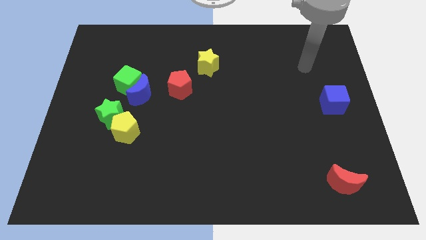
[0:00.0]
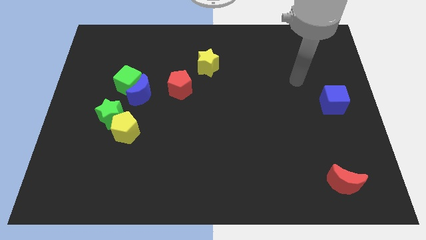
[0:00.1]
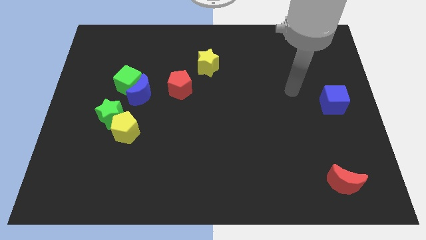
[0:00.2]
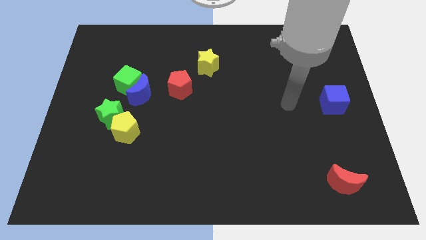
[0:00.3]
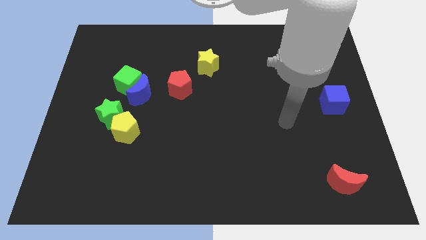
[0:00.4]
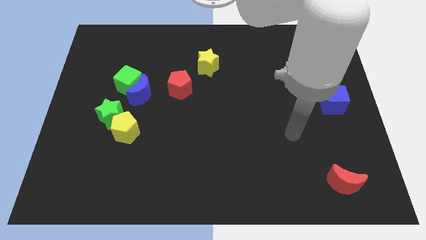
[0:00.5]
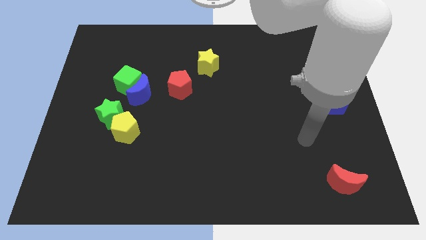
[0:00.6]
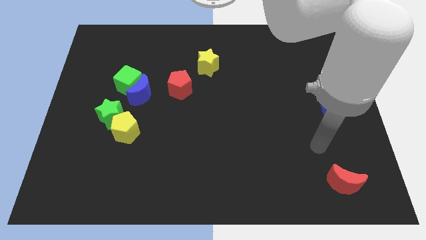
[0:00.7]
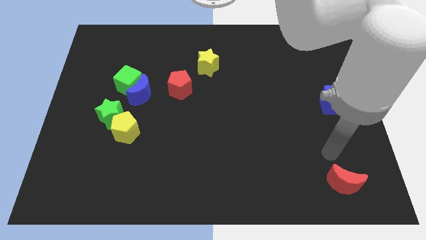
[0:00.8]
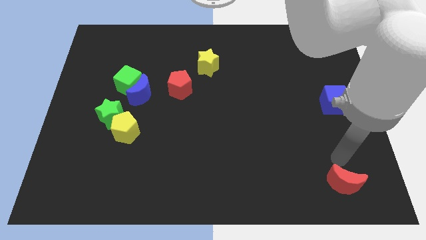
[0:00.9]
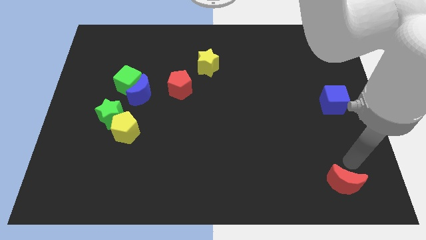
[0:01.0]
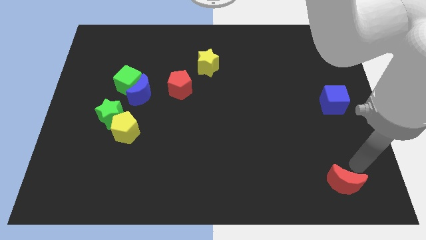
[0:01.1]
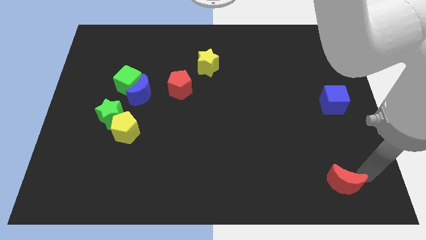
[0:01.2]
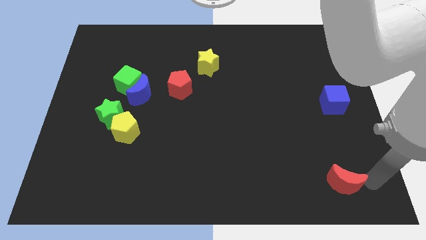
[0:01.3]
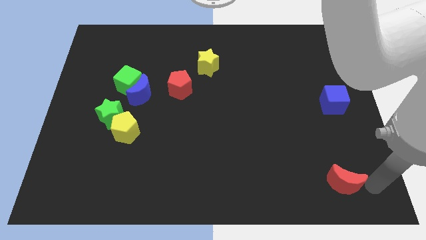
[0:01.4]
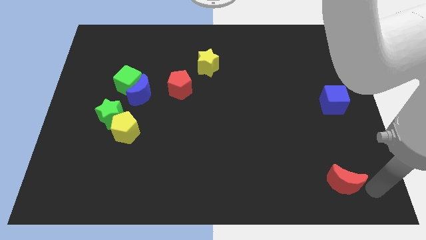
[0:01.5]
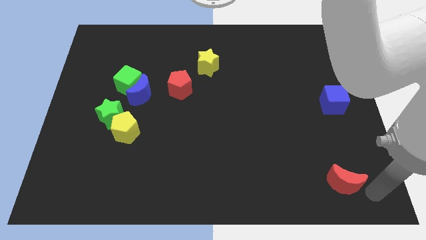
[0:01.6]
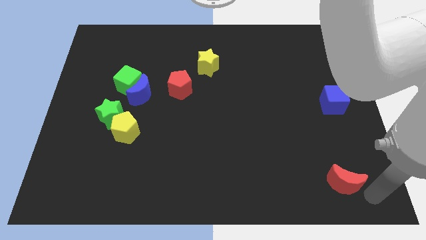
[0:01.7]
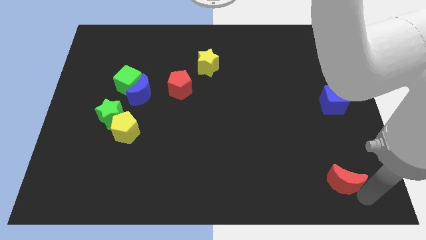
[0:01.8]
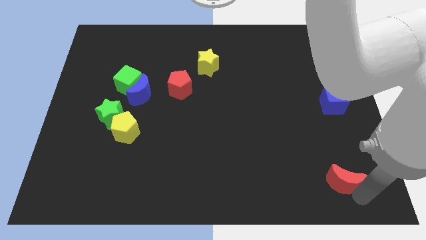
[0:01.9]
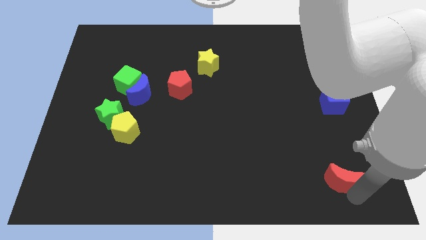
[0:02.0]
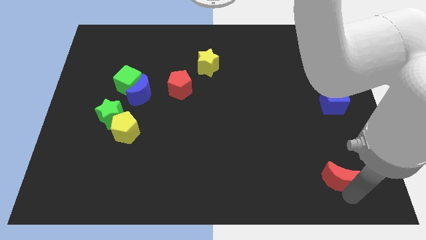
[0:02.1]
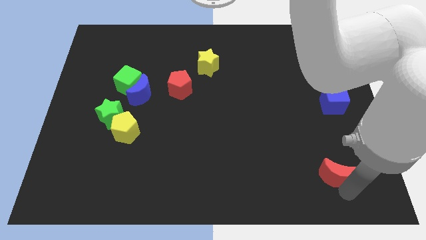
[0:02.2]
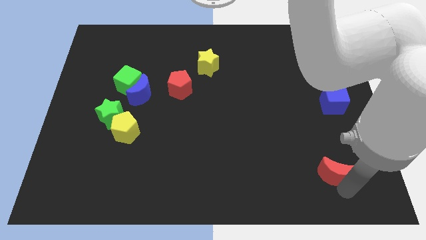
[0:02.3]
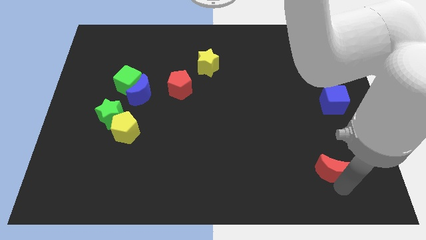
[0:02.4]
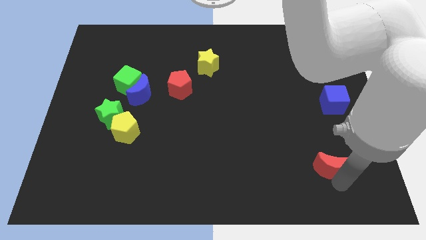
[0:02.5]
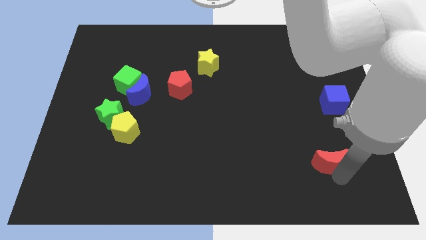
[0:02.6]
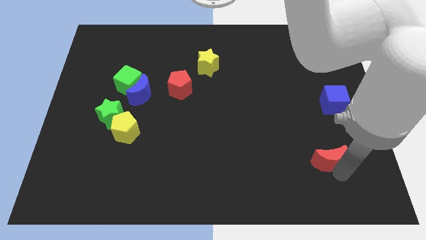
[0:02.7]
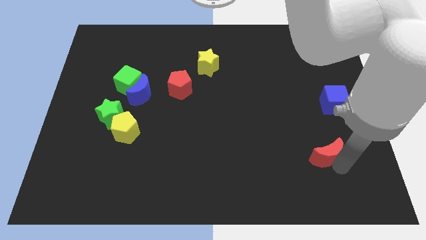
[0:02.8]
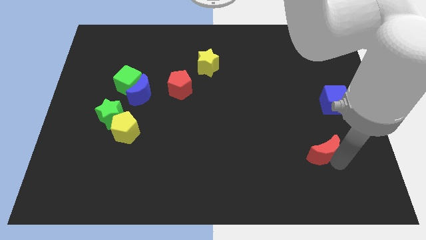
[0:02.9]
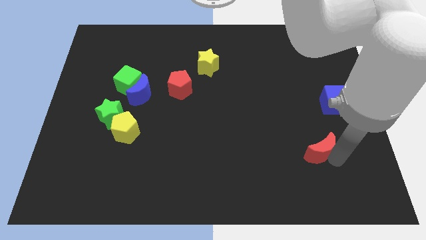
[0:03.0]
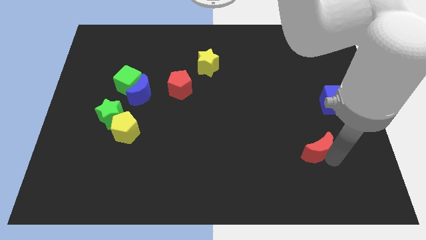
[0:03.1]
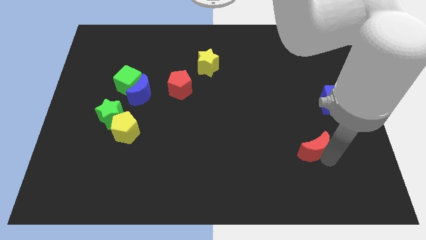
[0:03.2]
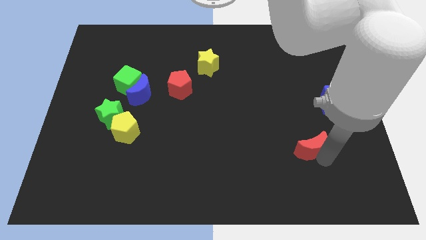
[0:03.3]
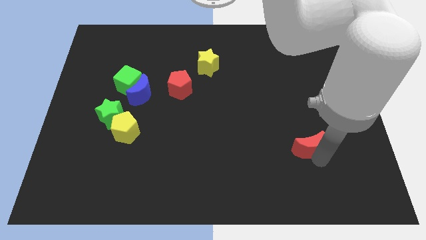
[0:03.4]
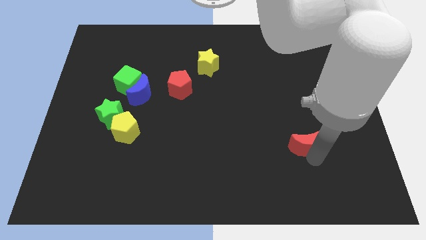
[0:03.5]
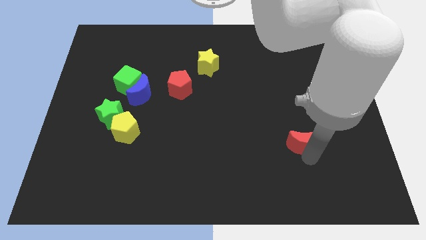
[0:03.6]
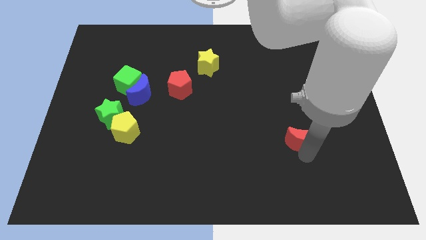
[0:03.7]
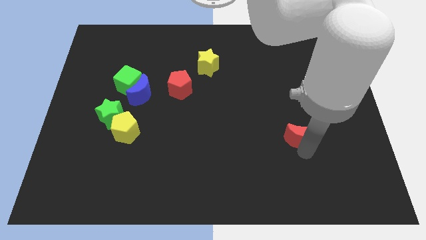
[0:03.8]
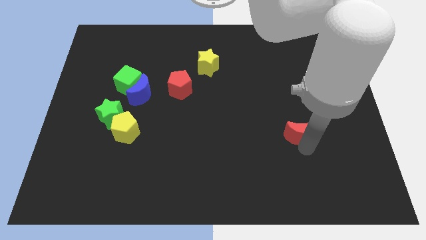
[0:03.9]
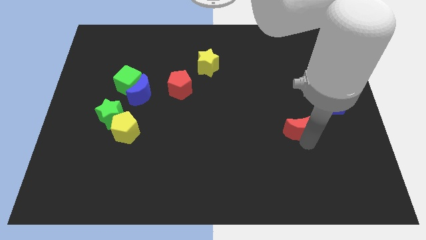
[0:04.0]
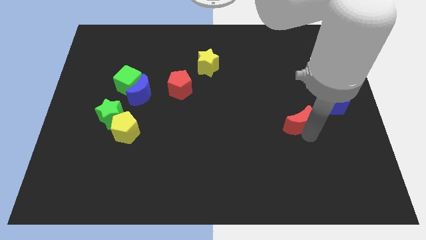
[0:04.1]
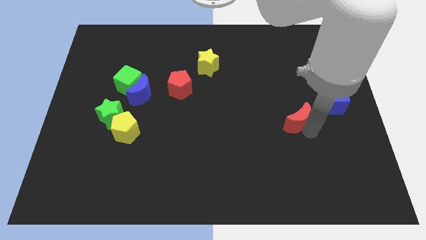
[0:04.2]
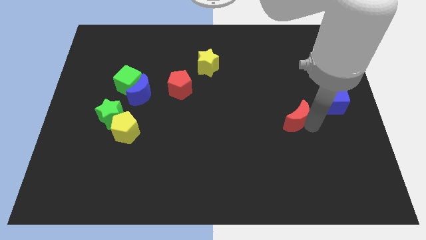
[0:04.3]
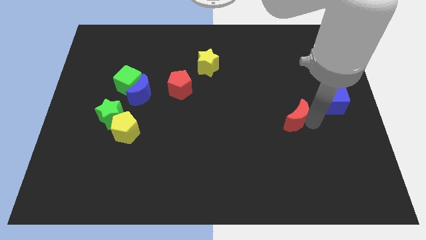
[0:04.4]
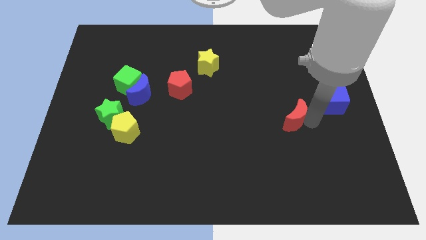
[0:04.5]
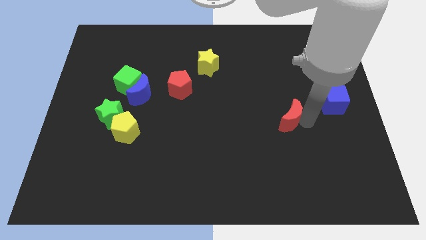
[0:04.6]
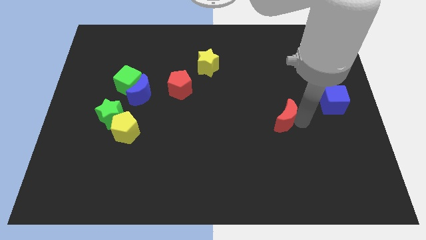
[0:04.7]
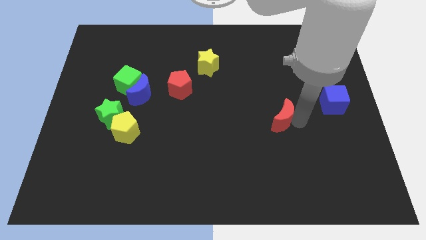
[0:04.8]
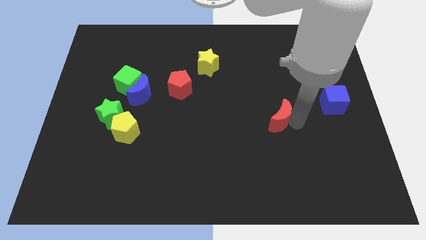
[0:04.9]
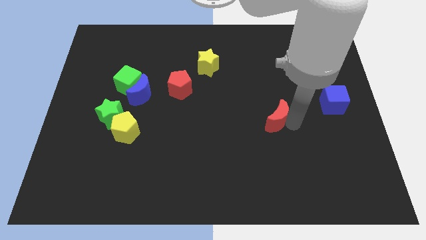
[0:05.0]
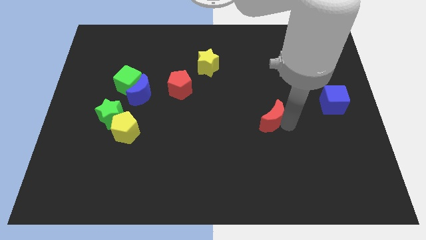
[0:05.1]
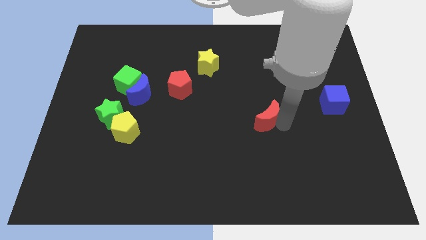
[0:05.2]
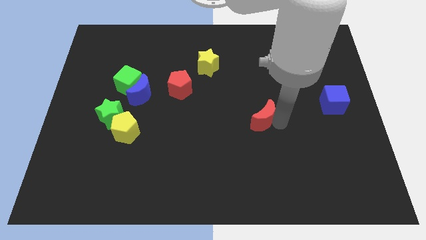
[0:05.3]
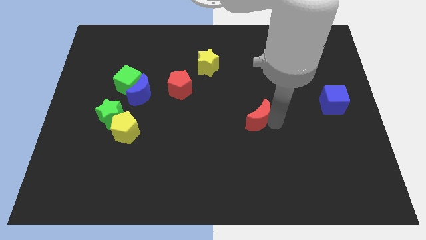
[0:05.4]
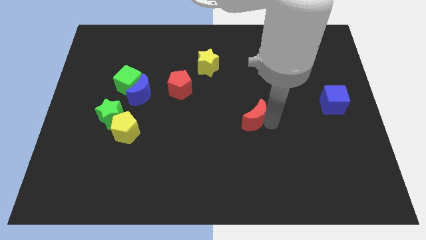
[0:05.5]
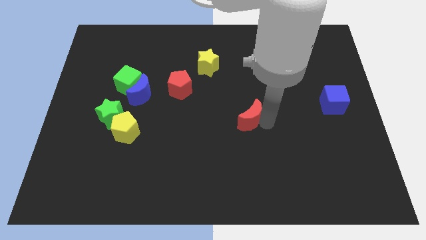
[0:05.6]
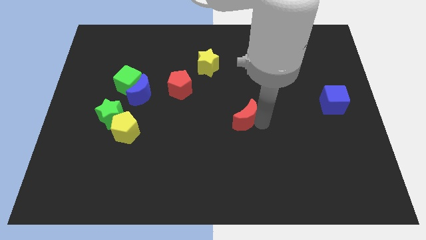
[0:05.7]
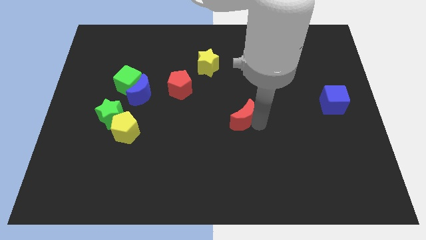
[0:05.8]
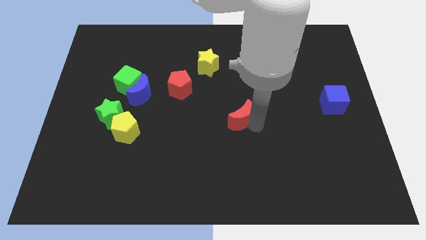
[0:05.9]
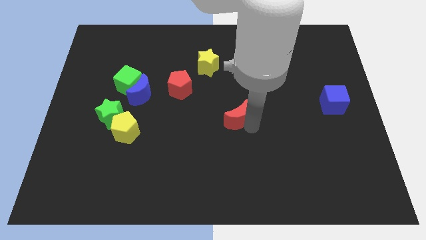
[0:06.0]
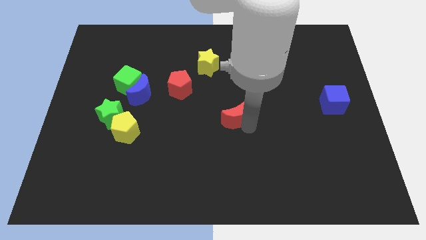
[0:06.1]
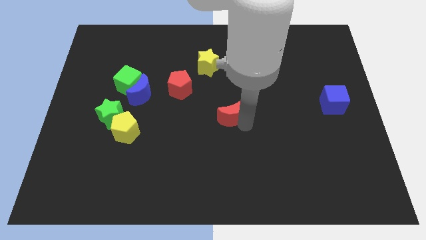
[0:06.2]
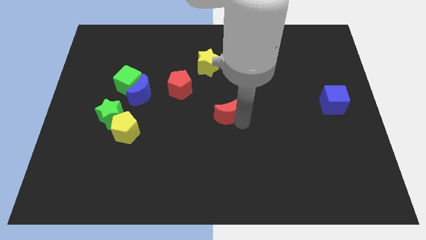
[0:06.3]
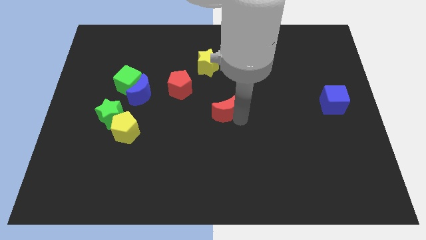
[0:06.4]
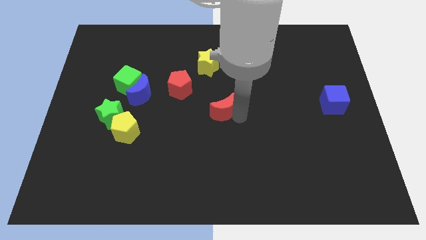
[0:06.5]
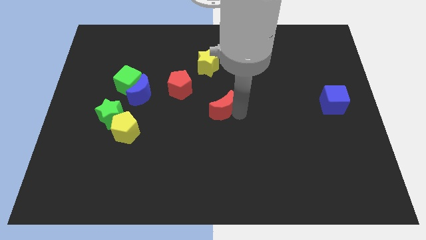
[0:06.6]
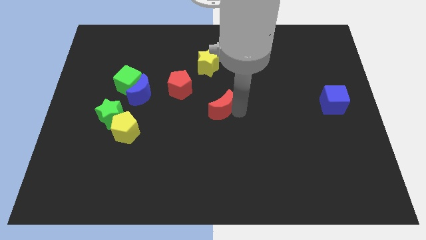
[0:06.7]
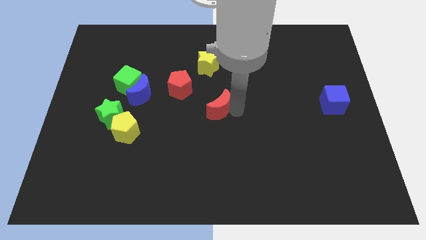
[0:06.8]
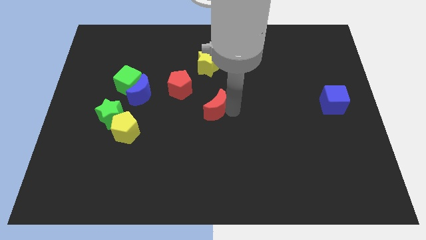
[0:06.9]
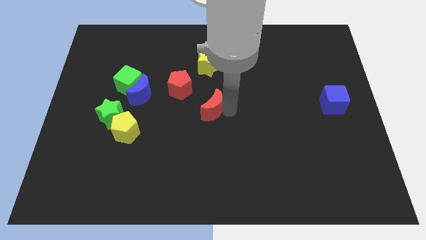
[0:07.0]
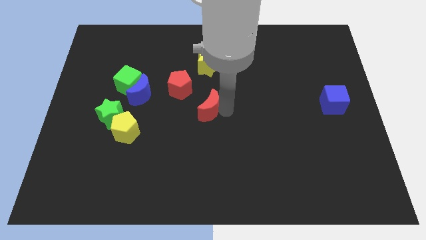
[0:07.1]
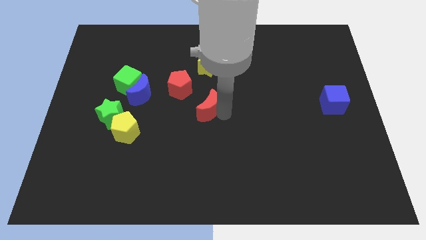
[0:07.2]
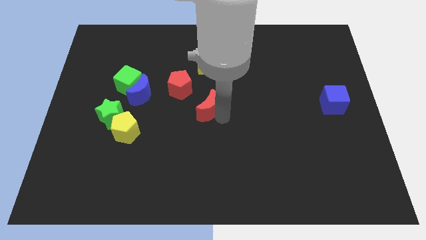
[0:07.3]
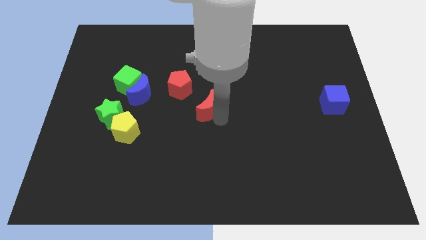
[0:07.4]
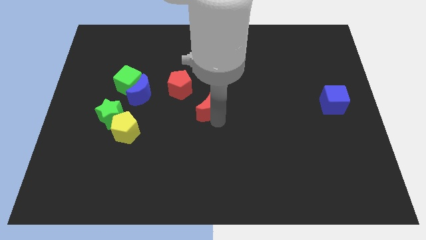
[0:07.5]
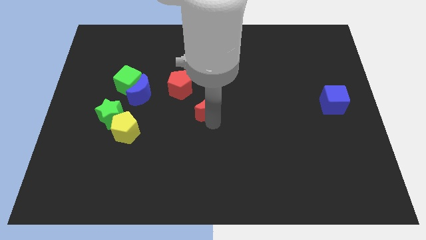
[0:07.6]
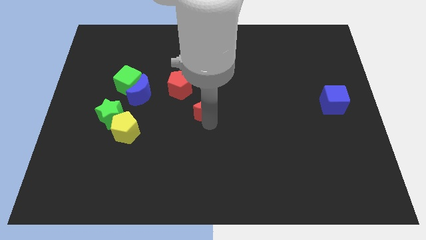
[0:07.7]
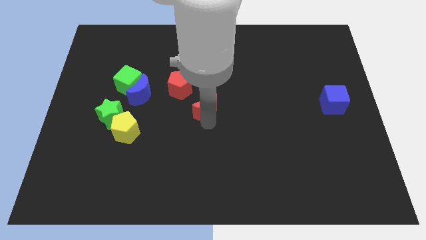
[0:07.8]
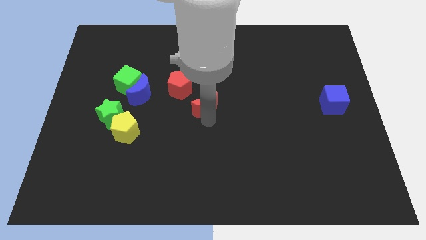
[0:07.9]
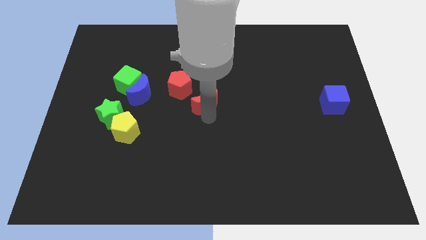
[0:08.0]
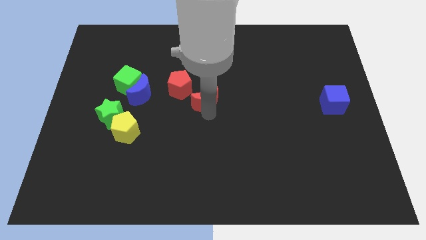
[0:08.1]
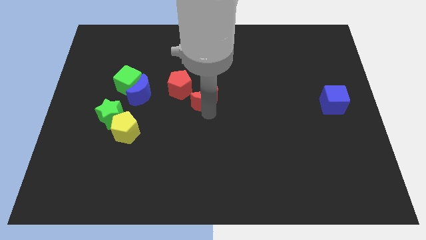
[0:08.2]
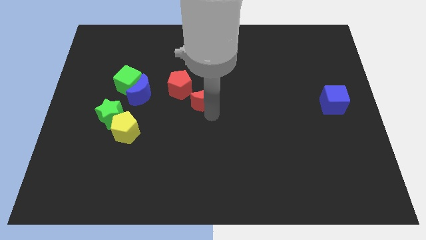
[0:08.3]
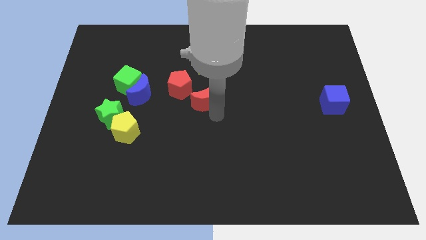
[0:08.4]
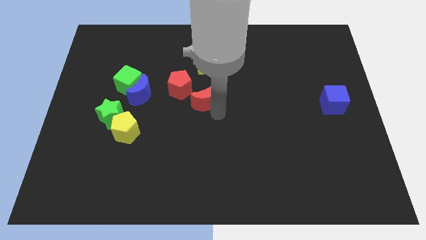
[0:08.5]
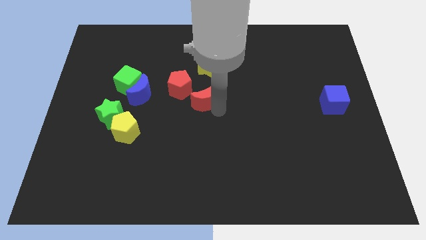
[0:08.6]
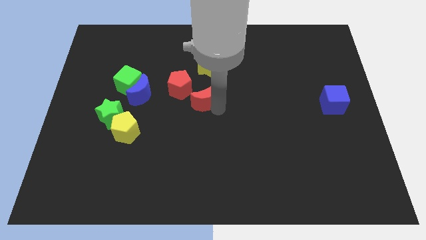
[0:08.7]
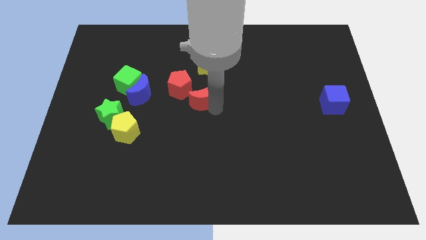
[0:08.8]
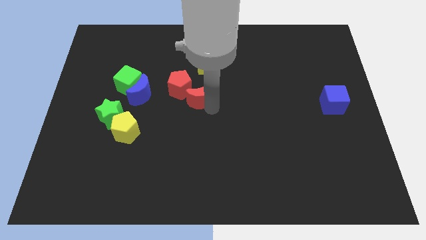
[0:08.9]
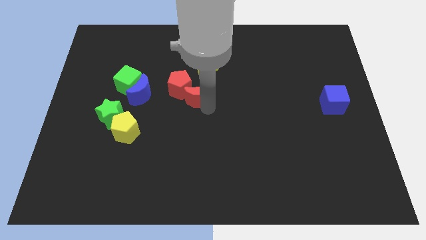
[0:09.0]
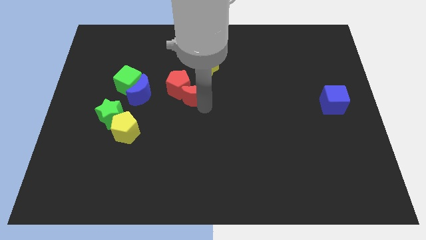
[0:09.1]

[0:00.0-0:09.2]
slide the red moon close to the red pentagon
